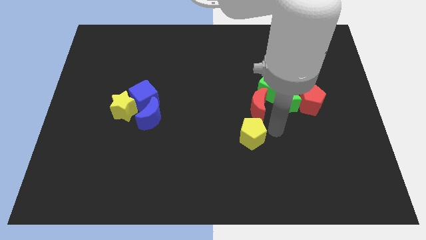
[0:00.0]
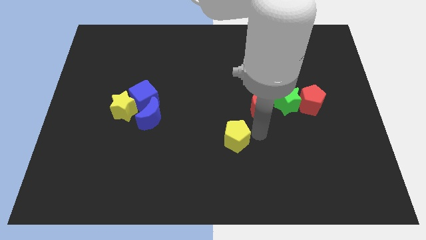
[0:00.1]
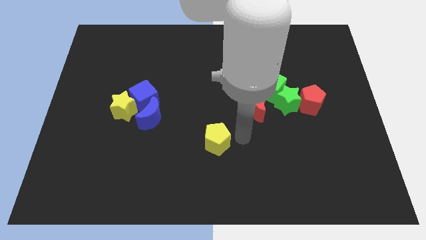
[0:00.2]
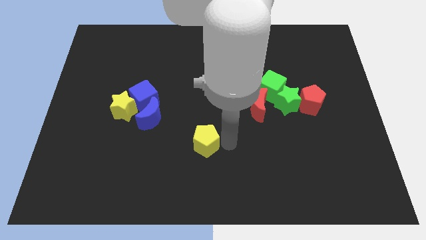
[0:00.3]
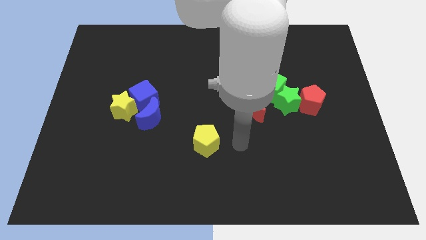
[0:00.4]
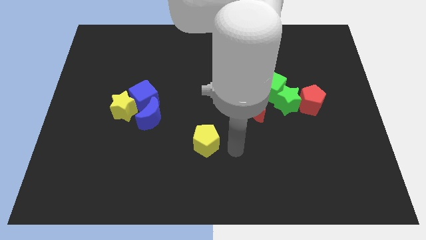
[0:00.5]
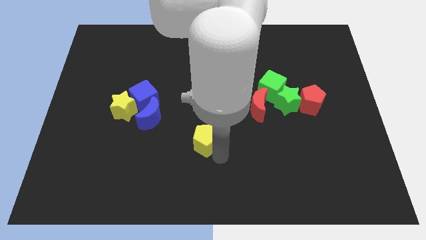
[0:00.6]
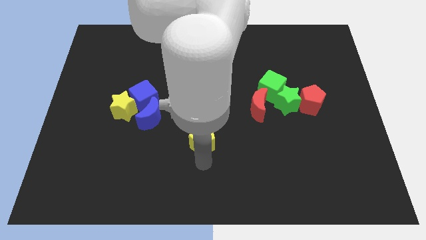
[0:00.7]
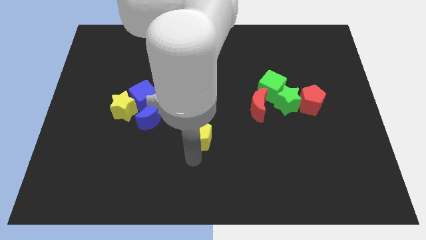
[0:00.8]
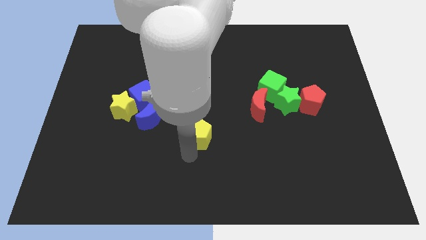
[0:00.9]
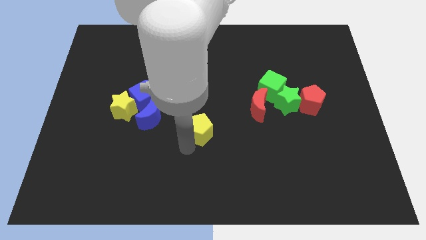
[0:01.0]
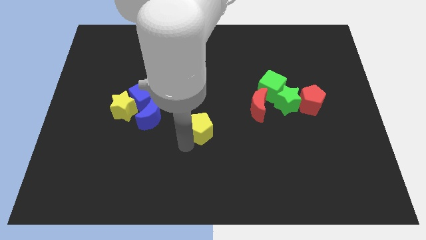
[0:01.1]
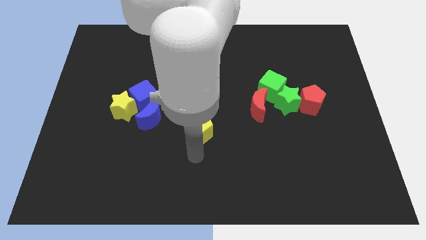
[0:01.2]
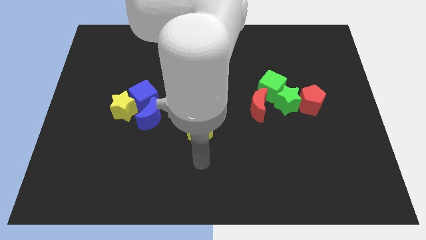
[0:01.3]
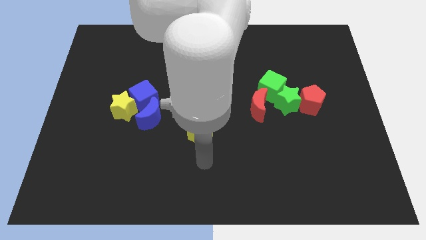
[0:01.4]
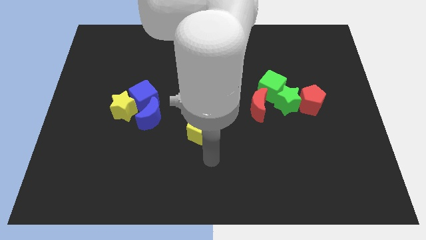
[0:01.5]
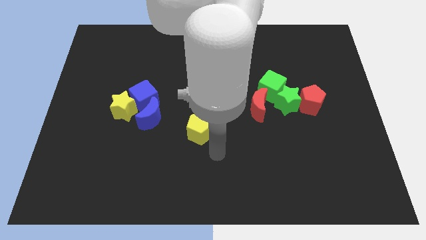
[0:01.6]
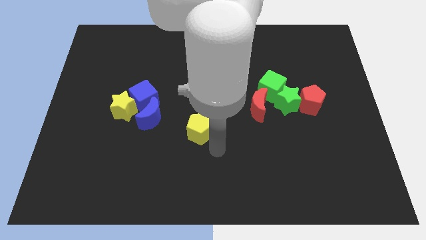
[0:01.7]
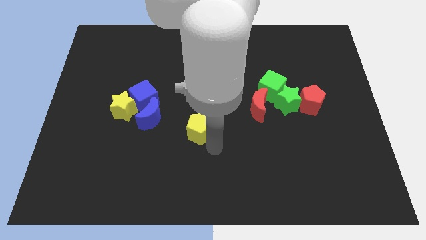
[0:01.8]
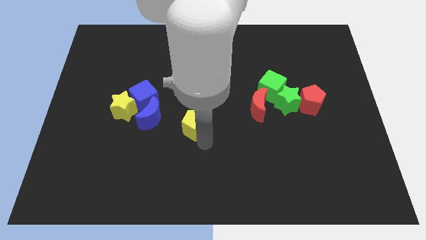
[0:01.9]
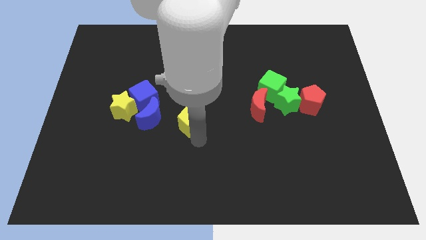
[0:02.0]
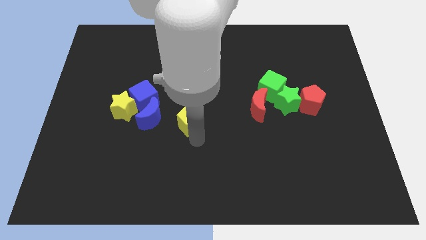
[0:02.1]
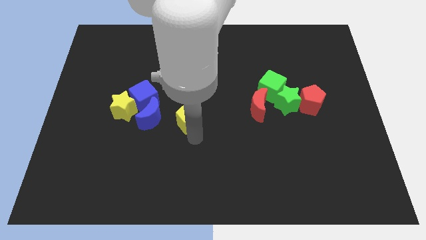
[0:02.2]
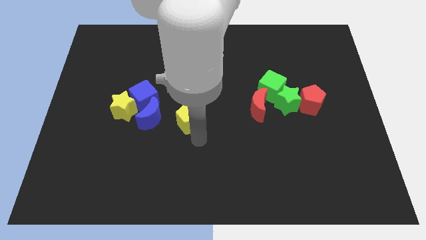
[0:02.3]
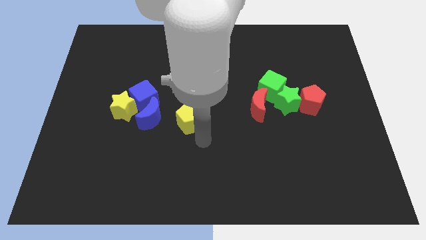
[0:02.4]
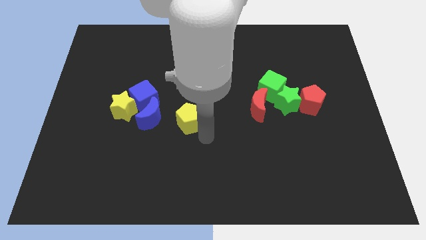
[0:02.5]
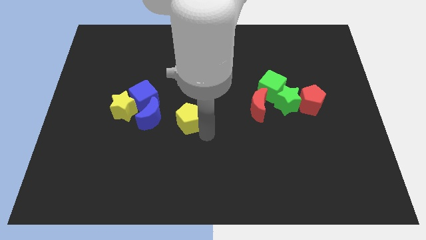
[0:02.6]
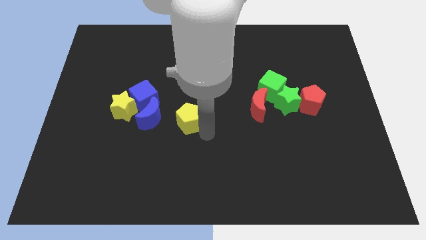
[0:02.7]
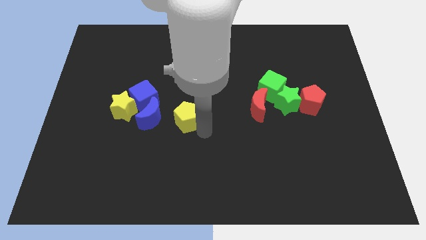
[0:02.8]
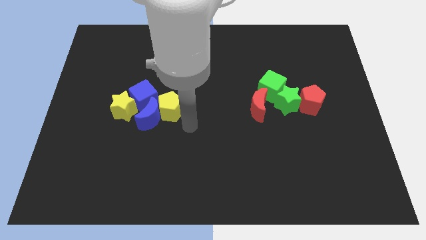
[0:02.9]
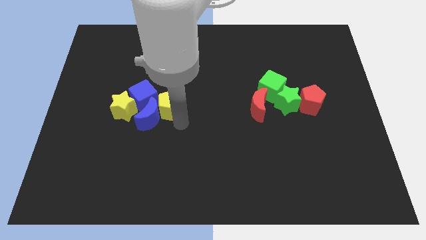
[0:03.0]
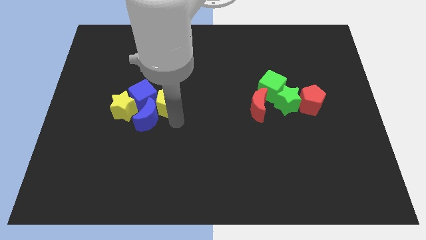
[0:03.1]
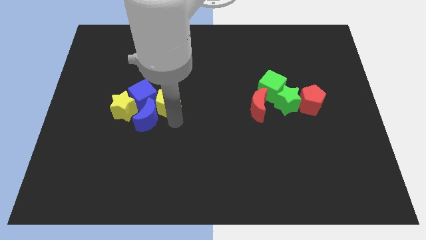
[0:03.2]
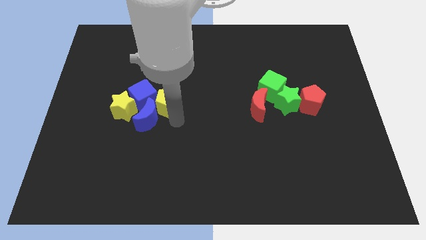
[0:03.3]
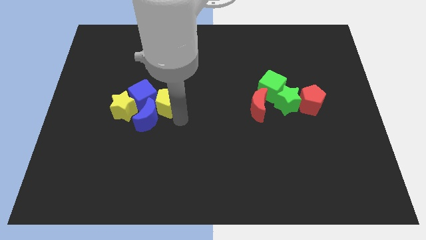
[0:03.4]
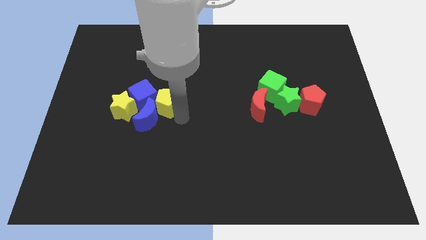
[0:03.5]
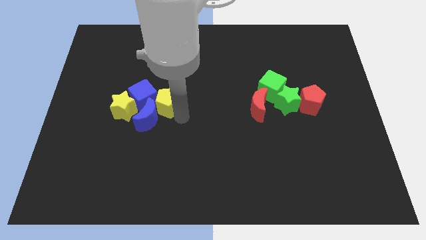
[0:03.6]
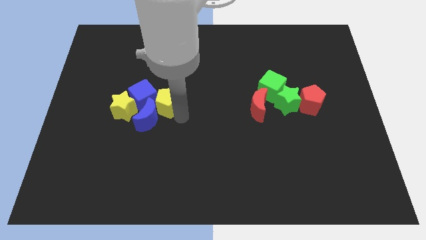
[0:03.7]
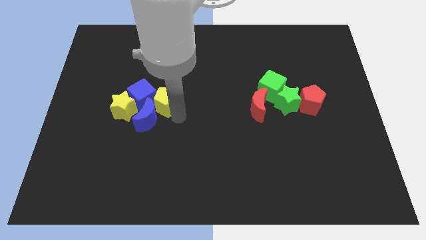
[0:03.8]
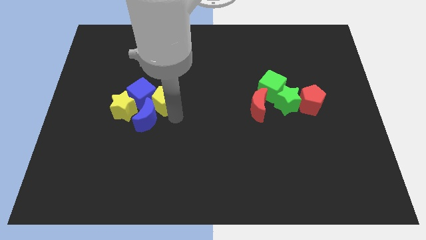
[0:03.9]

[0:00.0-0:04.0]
move the yellow pentagon to the right of the blue blocks

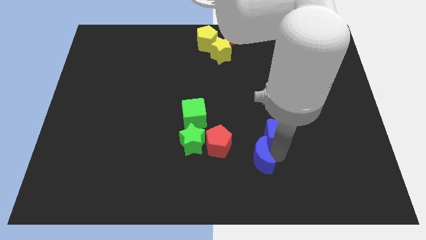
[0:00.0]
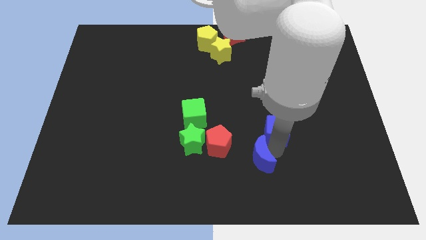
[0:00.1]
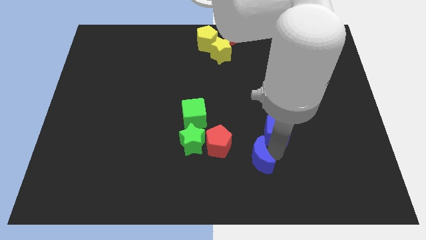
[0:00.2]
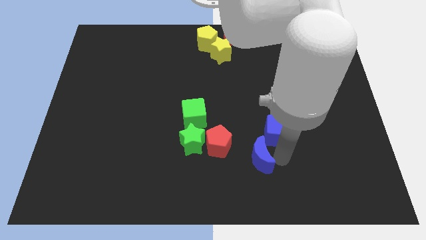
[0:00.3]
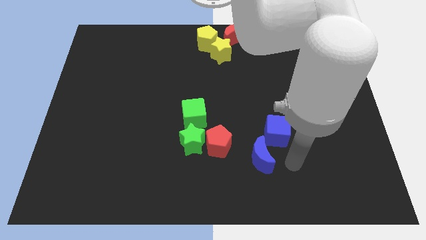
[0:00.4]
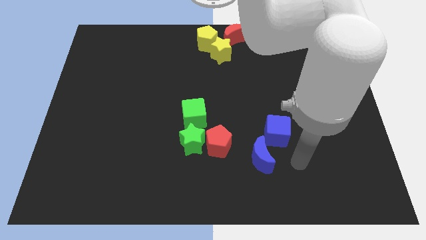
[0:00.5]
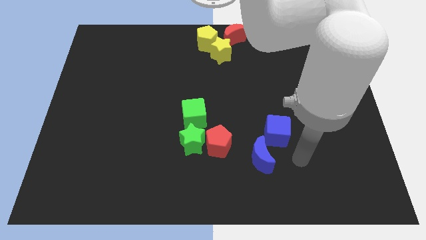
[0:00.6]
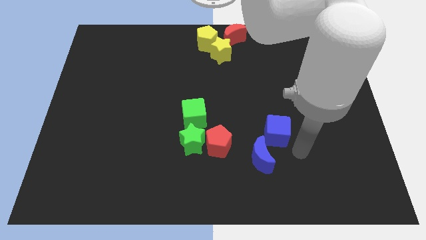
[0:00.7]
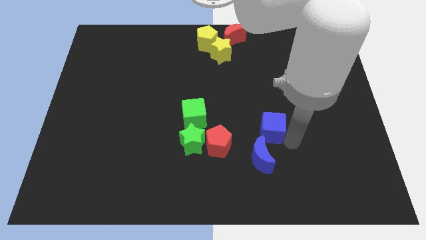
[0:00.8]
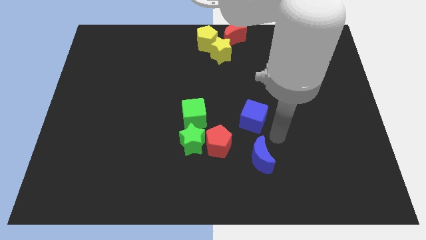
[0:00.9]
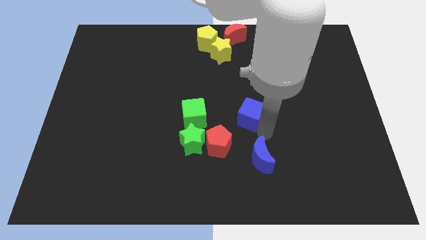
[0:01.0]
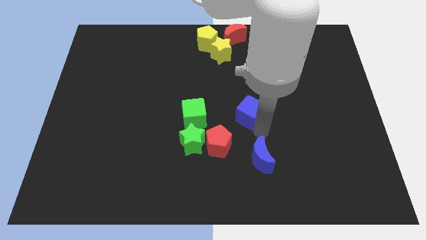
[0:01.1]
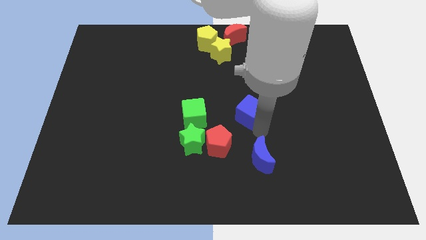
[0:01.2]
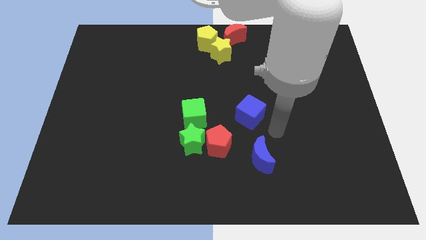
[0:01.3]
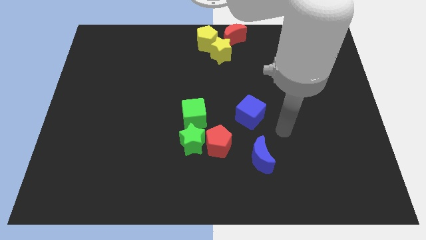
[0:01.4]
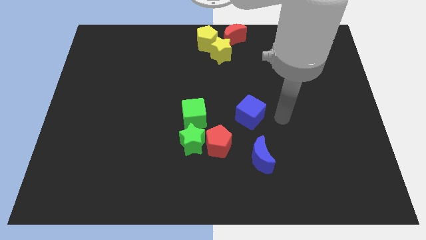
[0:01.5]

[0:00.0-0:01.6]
place the blue cube diagonally to red pentagon

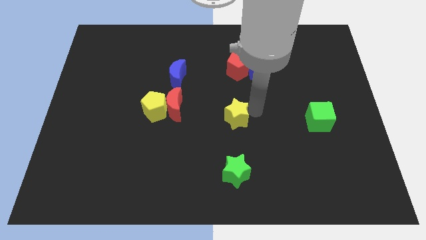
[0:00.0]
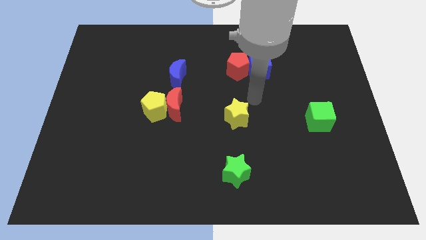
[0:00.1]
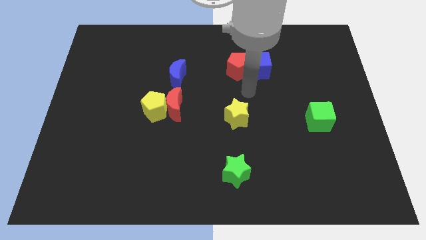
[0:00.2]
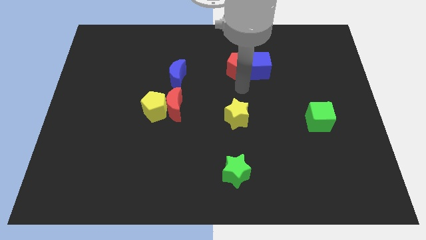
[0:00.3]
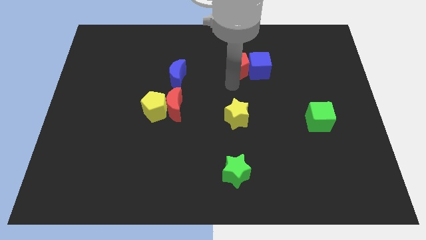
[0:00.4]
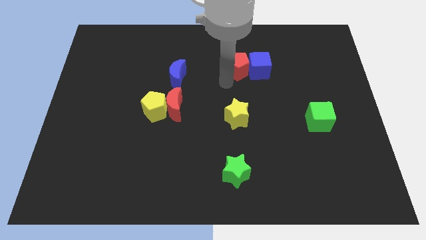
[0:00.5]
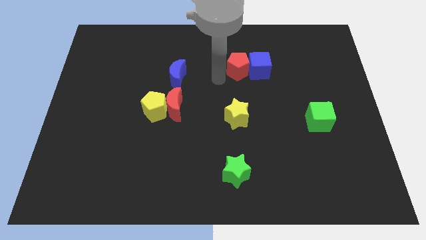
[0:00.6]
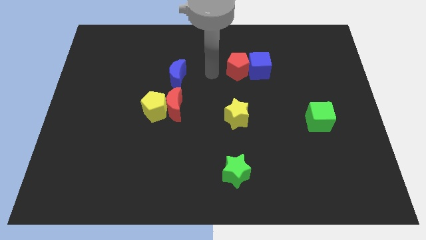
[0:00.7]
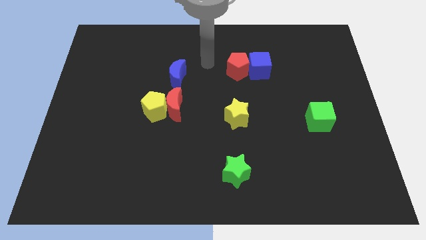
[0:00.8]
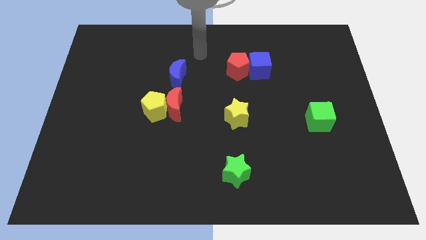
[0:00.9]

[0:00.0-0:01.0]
move arm away from yellow star

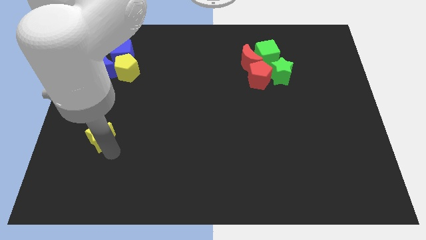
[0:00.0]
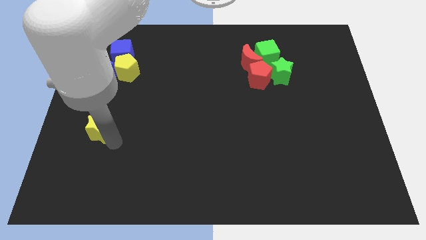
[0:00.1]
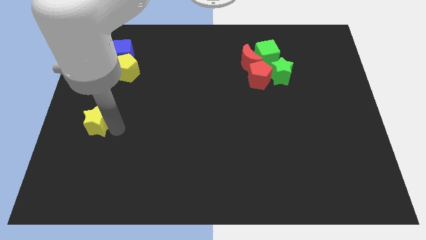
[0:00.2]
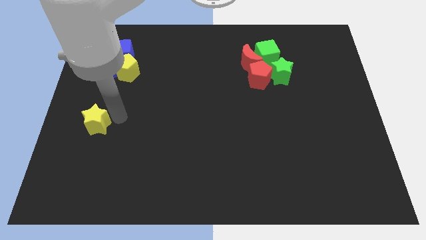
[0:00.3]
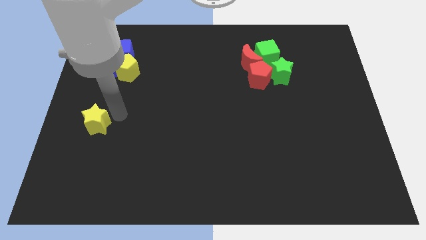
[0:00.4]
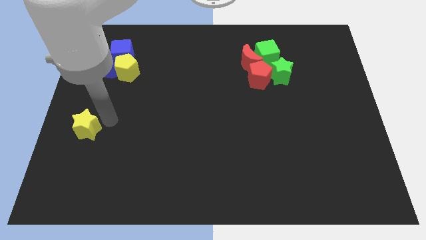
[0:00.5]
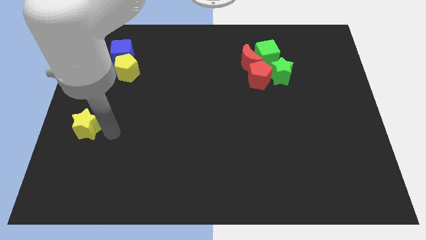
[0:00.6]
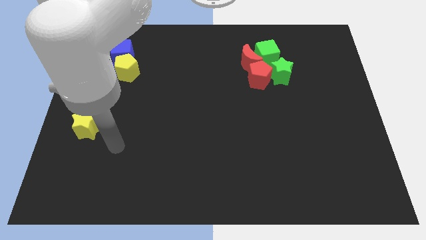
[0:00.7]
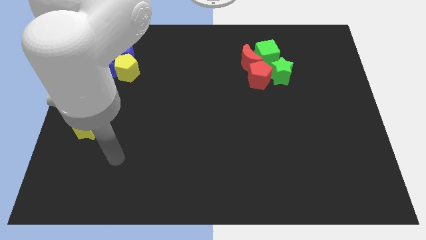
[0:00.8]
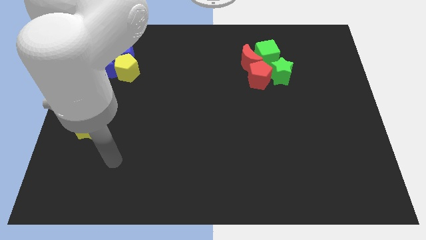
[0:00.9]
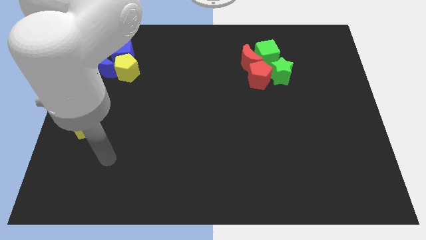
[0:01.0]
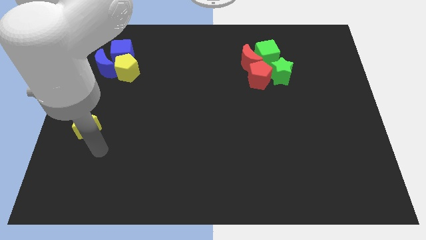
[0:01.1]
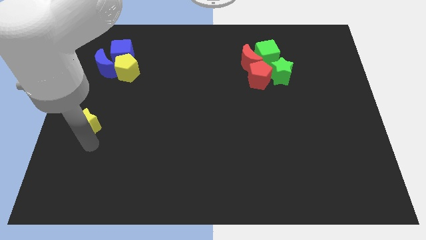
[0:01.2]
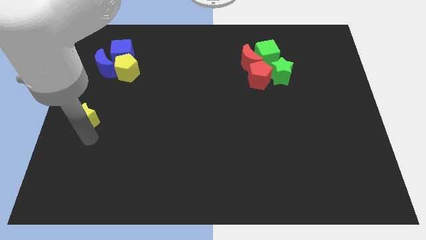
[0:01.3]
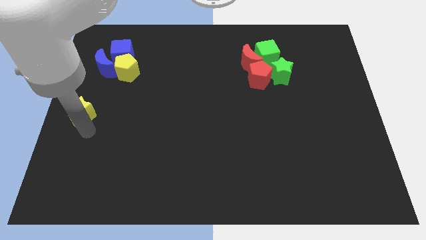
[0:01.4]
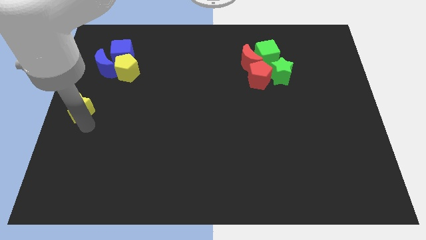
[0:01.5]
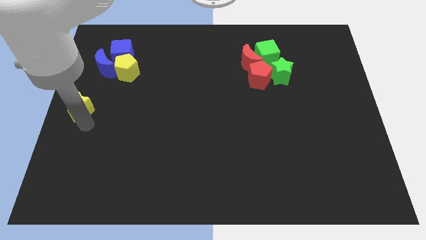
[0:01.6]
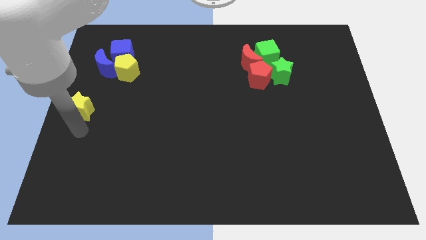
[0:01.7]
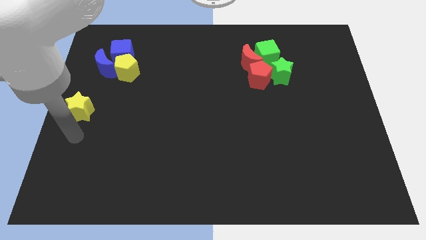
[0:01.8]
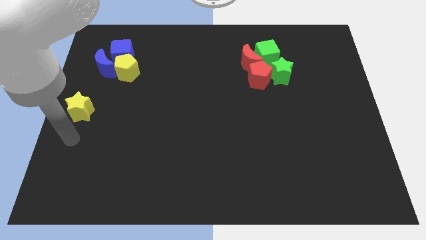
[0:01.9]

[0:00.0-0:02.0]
move the yellow pentagon to the left center of the board

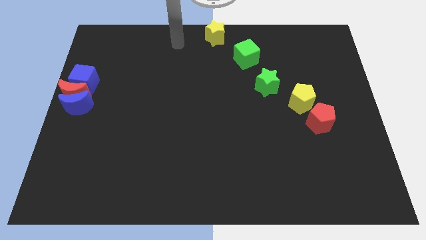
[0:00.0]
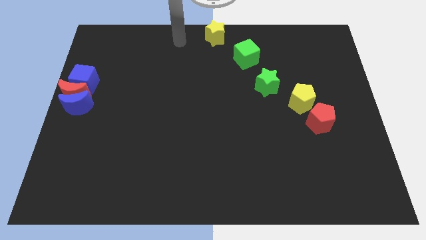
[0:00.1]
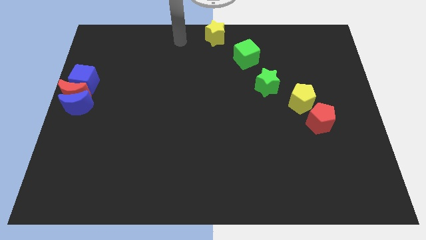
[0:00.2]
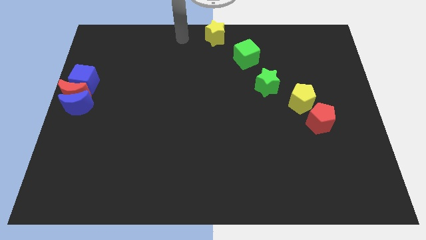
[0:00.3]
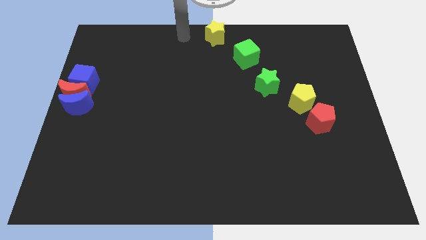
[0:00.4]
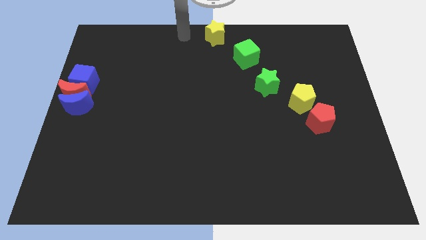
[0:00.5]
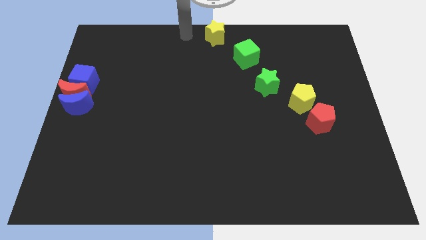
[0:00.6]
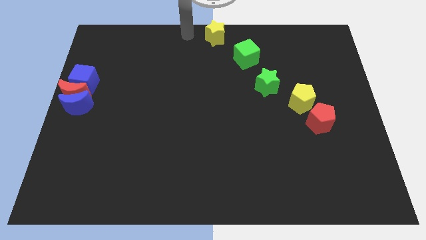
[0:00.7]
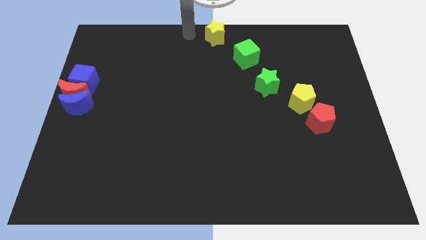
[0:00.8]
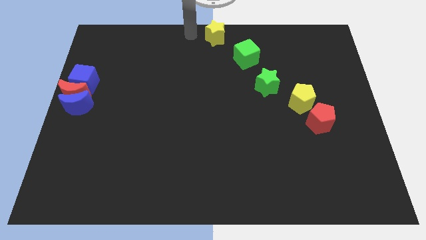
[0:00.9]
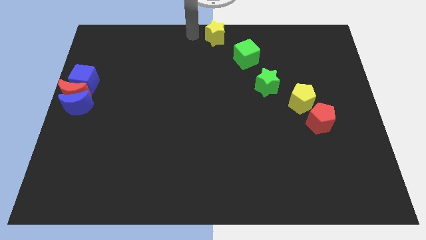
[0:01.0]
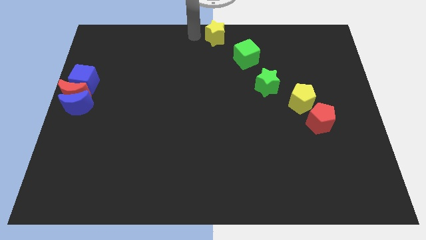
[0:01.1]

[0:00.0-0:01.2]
move the arm to the left of the yellow star
